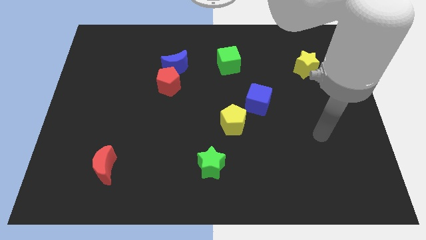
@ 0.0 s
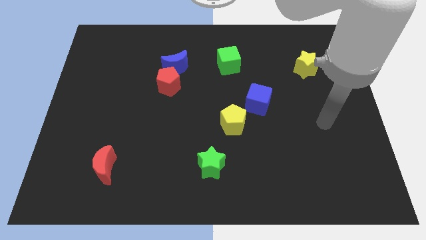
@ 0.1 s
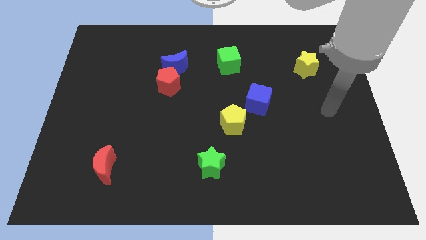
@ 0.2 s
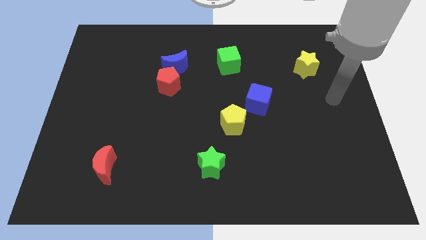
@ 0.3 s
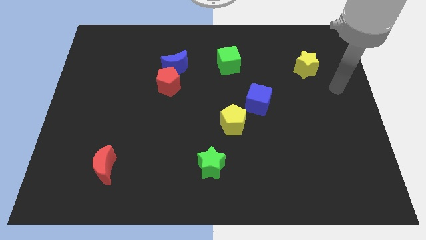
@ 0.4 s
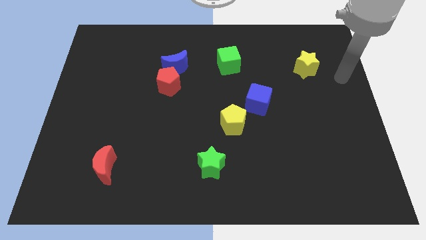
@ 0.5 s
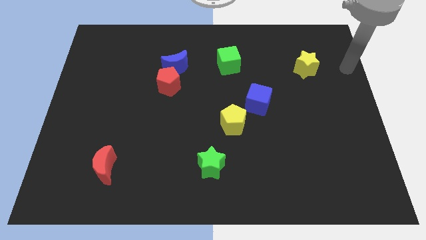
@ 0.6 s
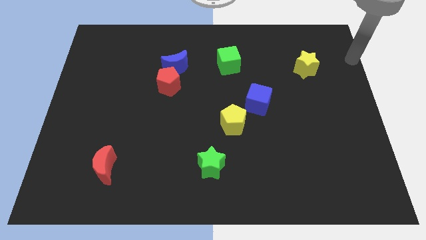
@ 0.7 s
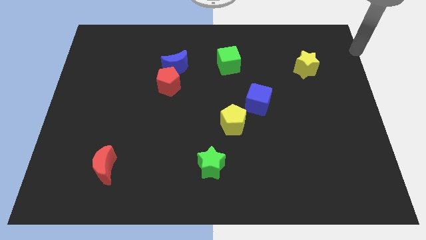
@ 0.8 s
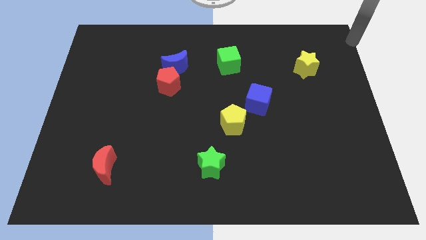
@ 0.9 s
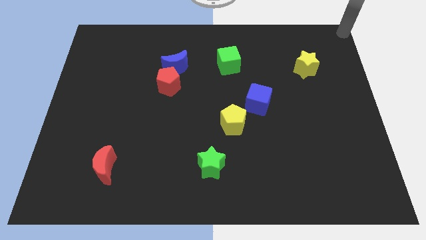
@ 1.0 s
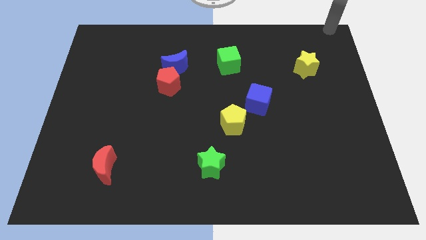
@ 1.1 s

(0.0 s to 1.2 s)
point the arm to the top right corner of the board

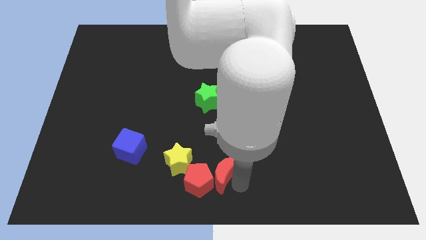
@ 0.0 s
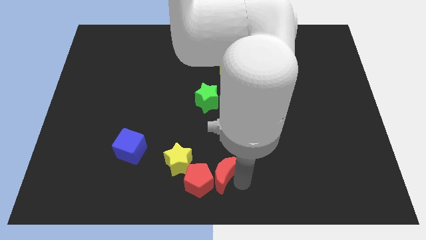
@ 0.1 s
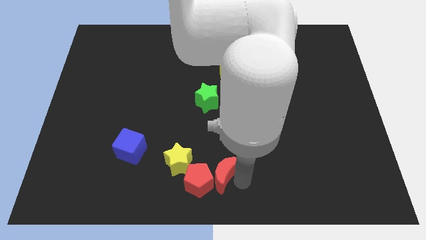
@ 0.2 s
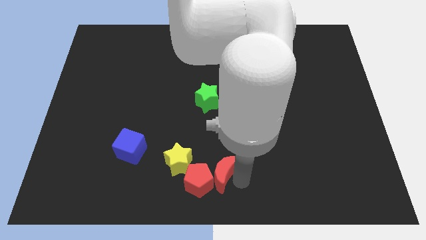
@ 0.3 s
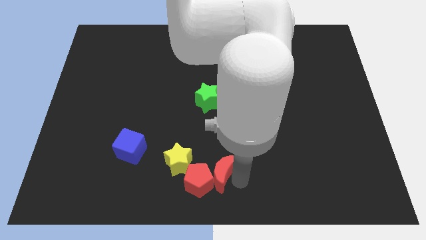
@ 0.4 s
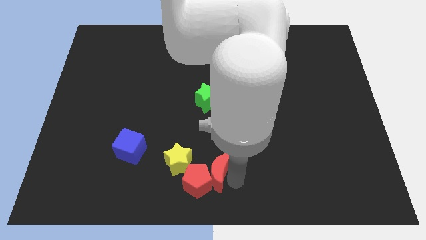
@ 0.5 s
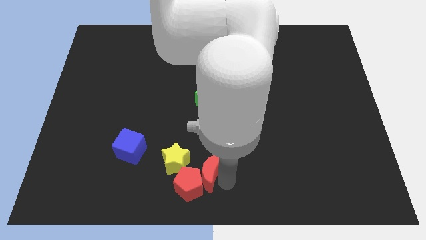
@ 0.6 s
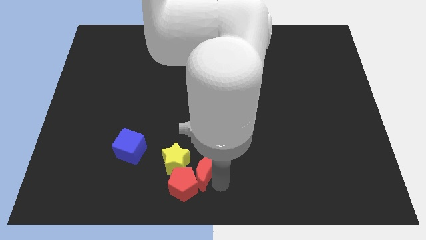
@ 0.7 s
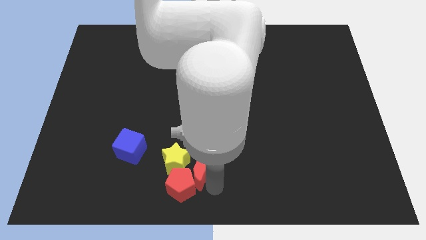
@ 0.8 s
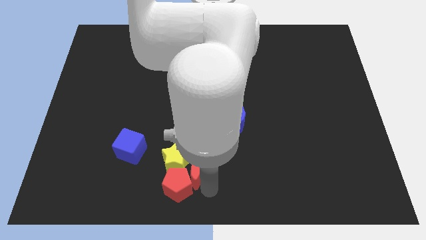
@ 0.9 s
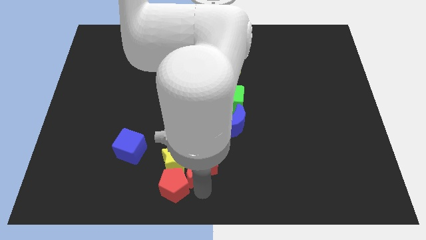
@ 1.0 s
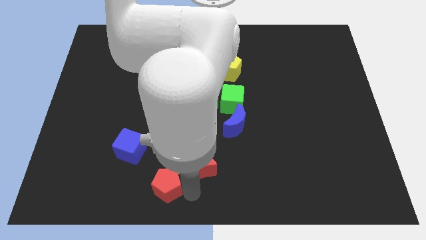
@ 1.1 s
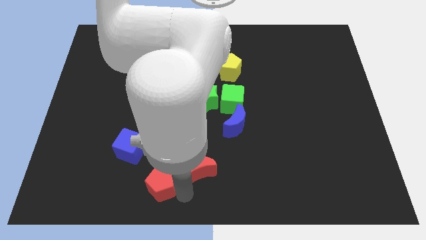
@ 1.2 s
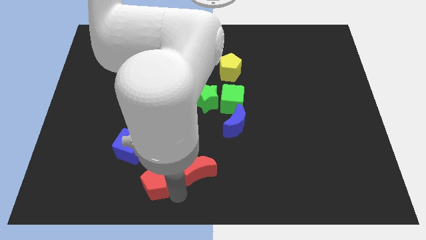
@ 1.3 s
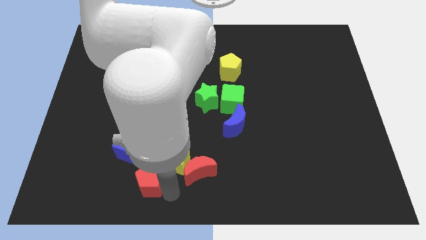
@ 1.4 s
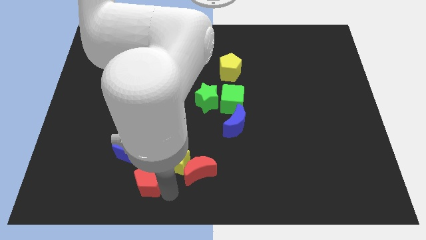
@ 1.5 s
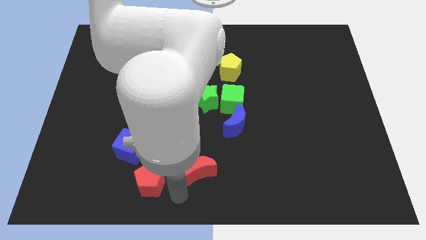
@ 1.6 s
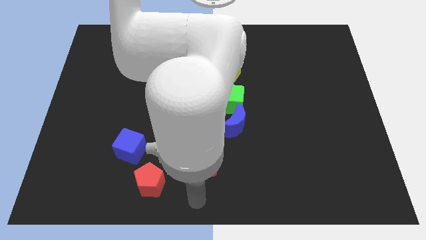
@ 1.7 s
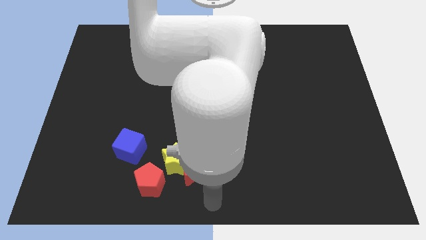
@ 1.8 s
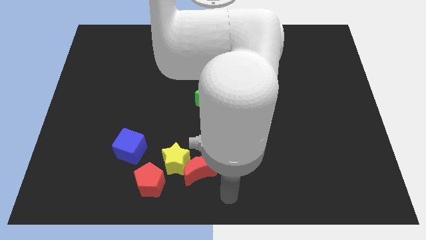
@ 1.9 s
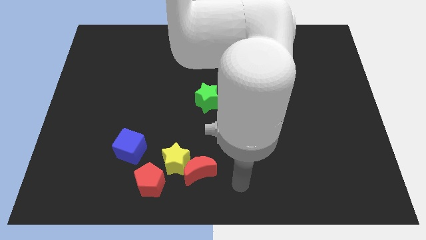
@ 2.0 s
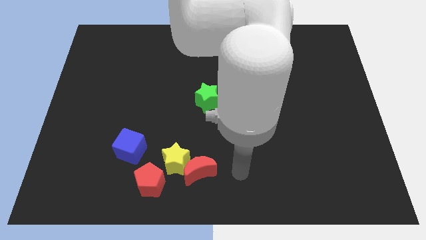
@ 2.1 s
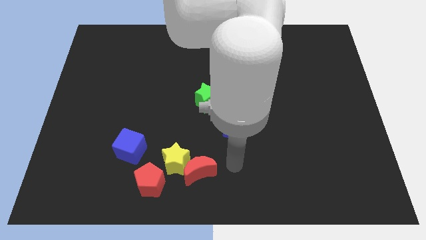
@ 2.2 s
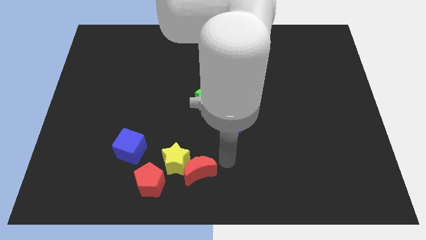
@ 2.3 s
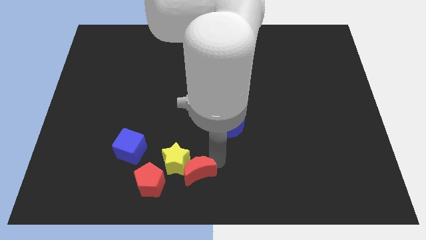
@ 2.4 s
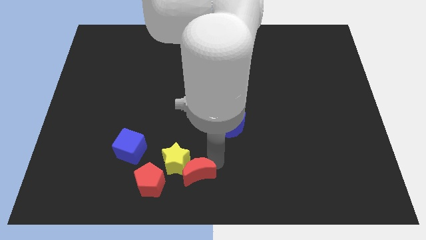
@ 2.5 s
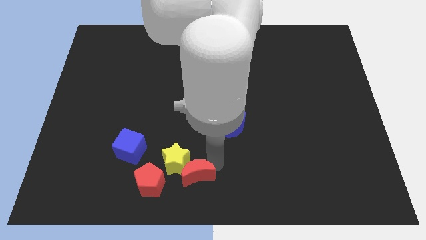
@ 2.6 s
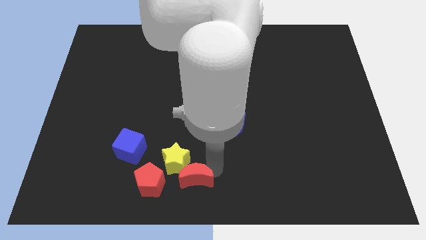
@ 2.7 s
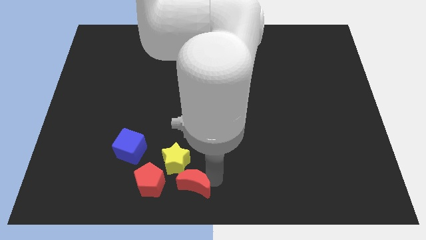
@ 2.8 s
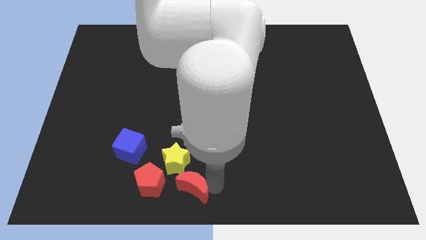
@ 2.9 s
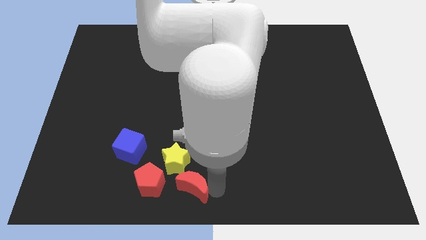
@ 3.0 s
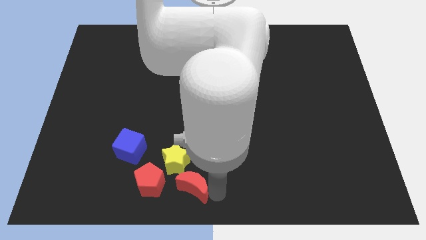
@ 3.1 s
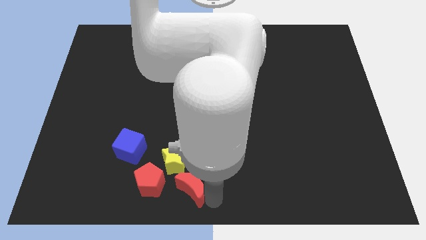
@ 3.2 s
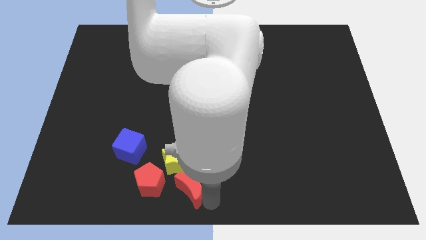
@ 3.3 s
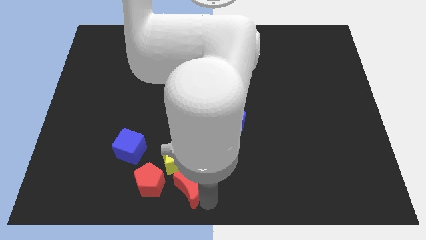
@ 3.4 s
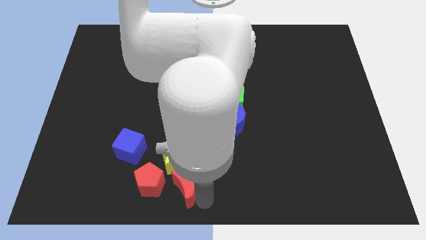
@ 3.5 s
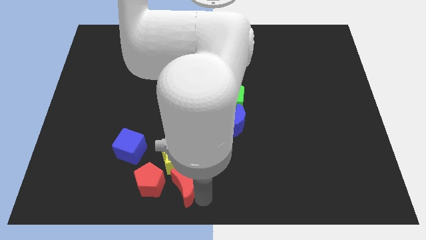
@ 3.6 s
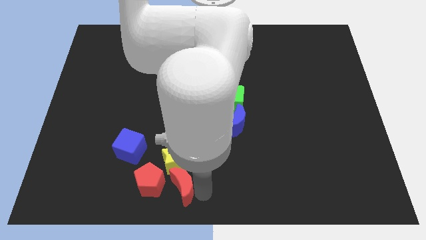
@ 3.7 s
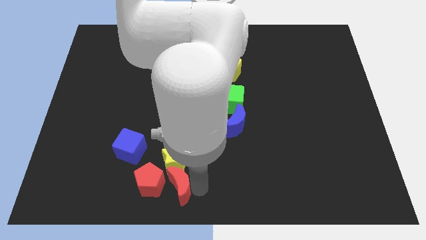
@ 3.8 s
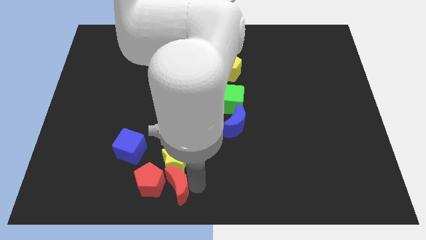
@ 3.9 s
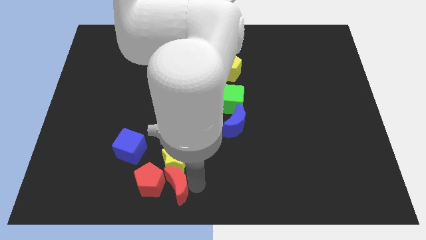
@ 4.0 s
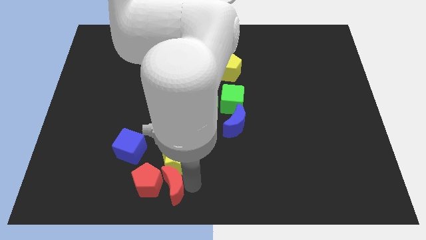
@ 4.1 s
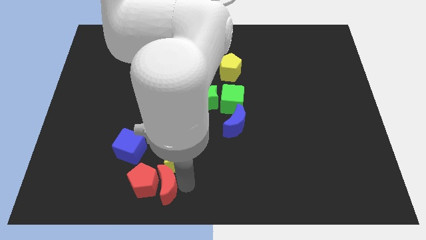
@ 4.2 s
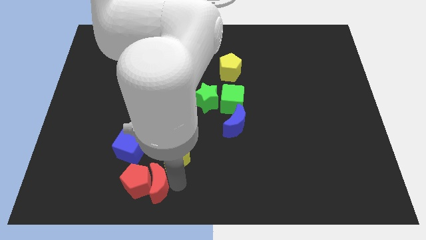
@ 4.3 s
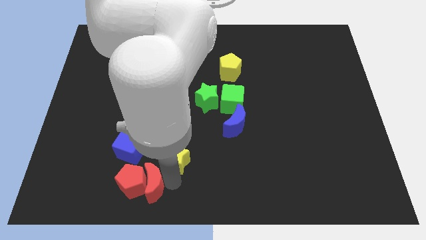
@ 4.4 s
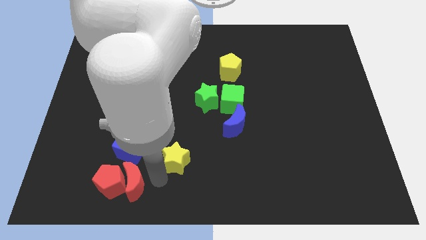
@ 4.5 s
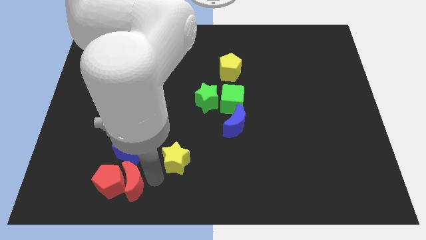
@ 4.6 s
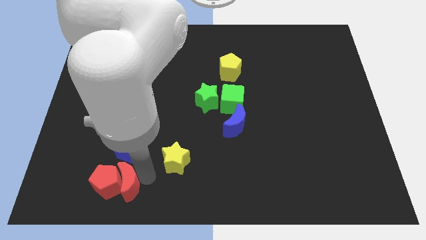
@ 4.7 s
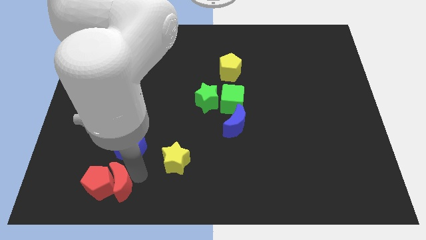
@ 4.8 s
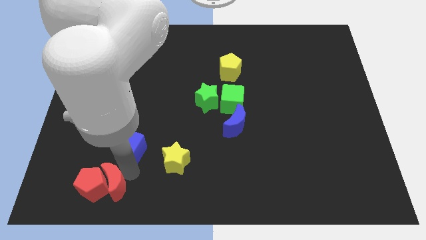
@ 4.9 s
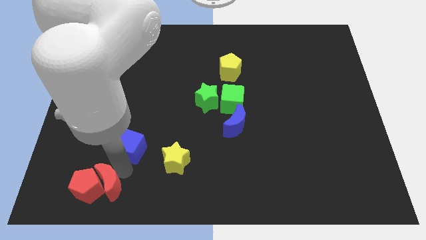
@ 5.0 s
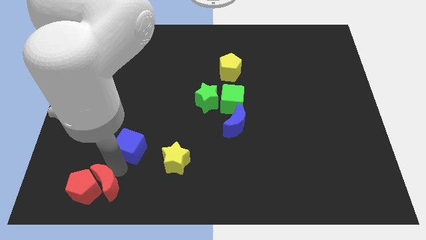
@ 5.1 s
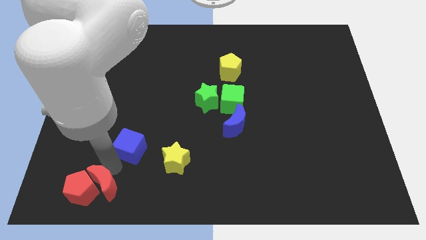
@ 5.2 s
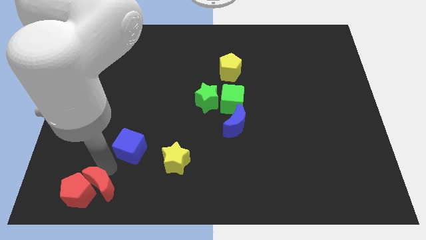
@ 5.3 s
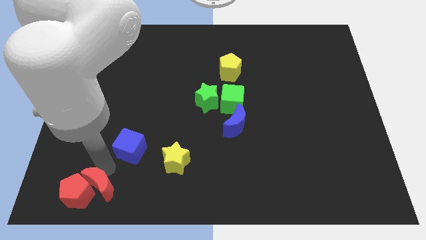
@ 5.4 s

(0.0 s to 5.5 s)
move the red pentagon an dred crescent to the bottom left of the board

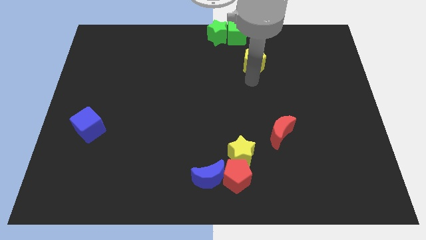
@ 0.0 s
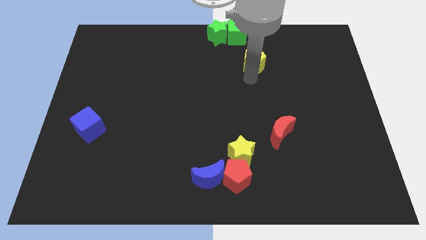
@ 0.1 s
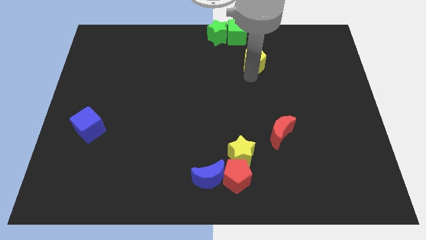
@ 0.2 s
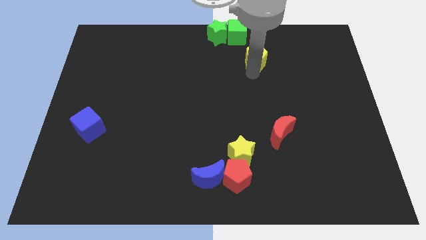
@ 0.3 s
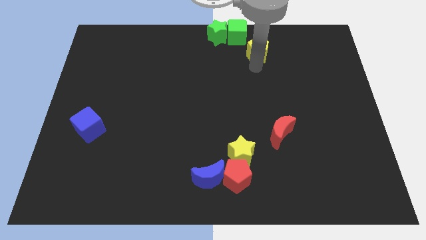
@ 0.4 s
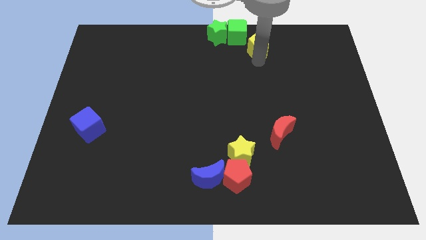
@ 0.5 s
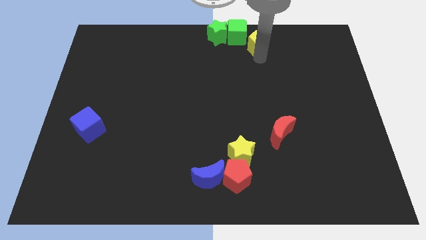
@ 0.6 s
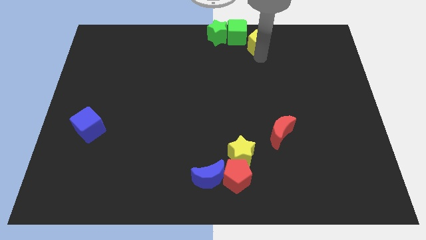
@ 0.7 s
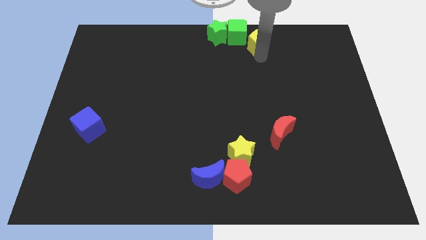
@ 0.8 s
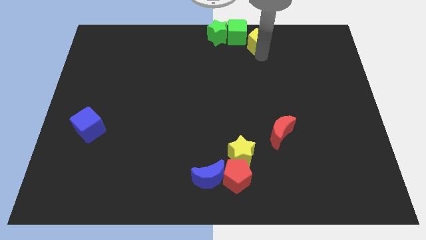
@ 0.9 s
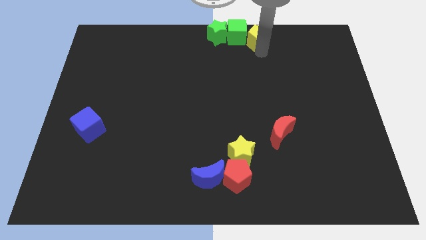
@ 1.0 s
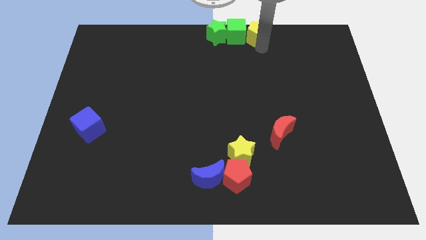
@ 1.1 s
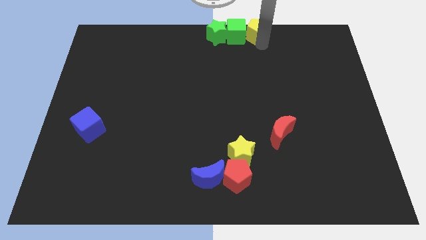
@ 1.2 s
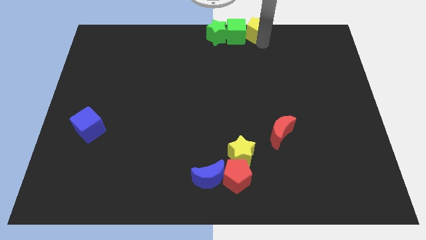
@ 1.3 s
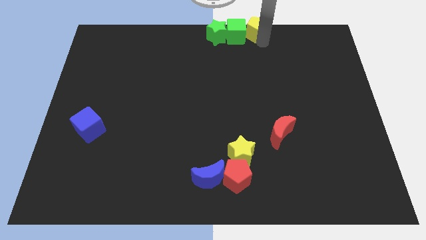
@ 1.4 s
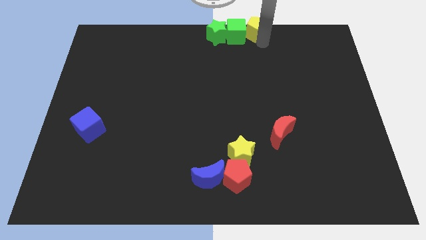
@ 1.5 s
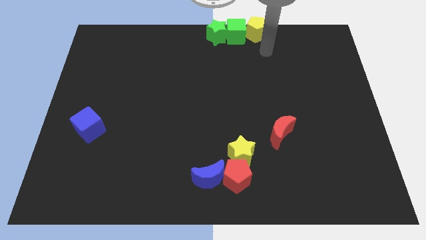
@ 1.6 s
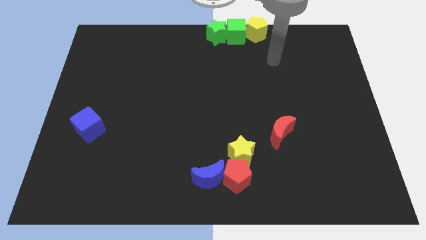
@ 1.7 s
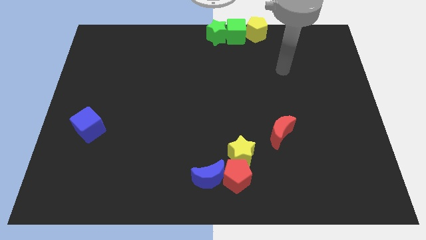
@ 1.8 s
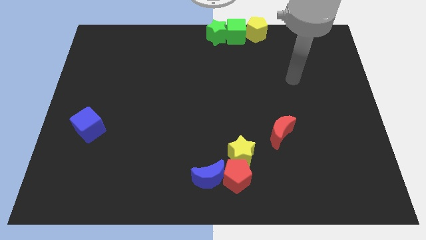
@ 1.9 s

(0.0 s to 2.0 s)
place the yellow pentagon right to the green cube on the board

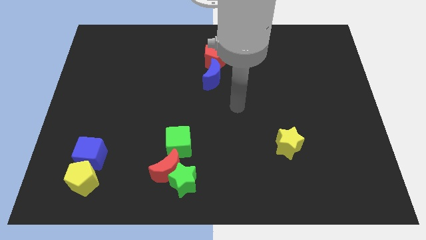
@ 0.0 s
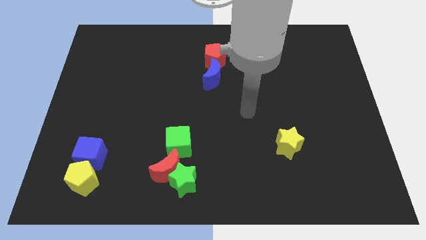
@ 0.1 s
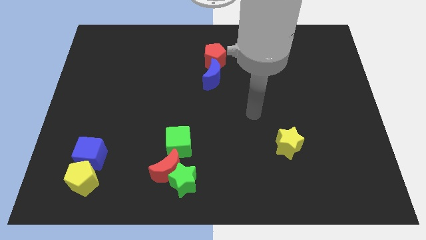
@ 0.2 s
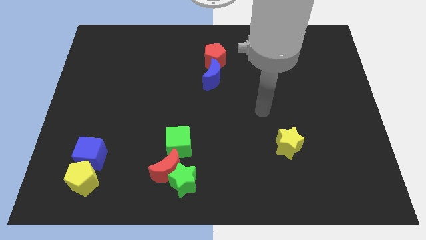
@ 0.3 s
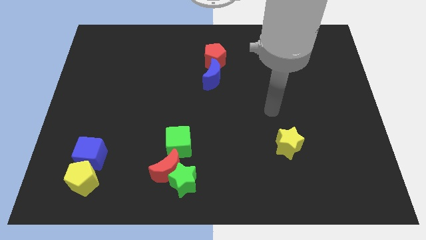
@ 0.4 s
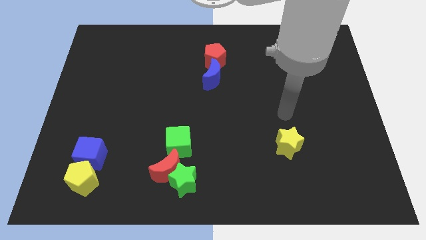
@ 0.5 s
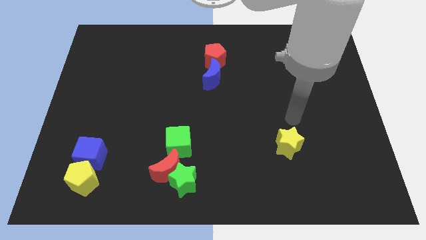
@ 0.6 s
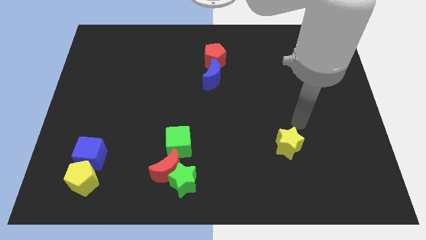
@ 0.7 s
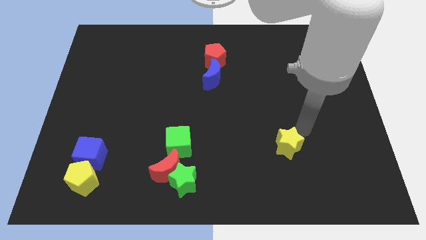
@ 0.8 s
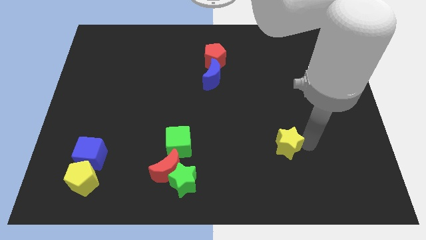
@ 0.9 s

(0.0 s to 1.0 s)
place arm right to yellow star
